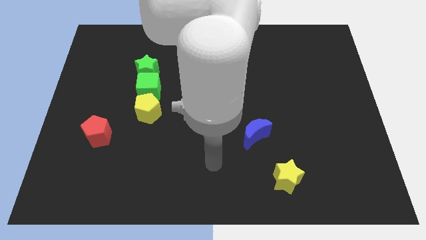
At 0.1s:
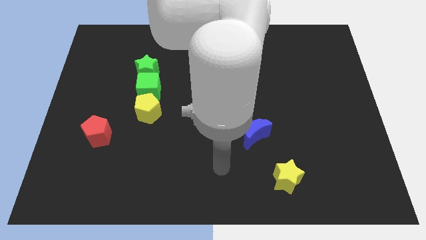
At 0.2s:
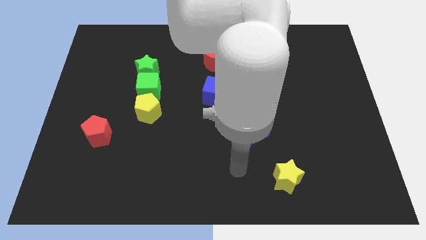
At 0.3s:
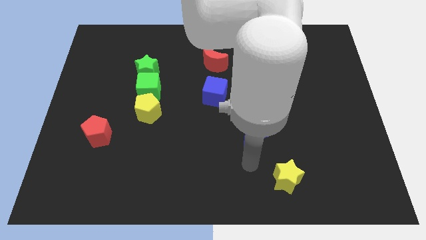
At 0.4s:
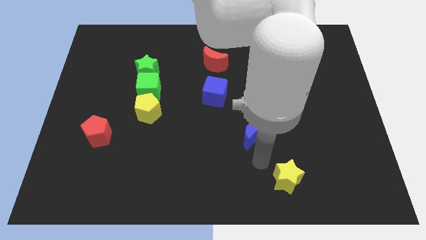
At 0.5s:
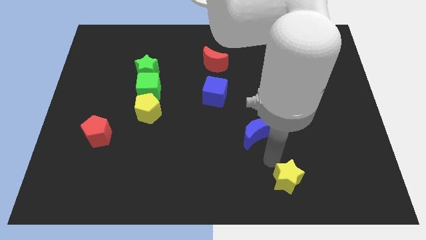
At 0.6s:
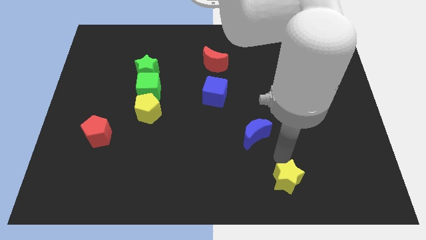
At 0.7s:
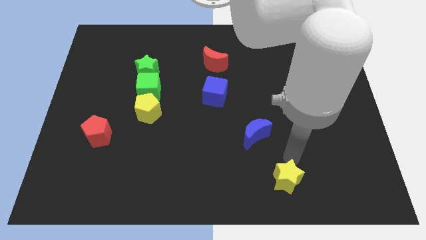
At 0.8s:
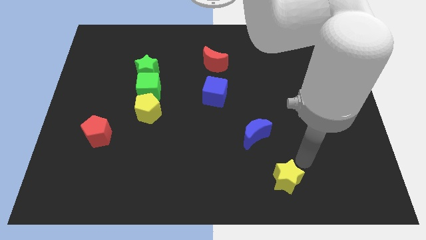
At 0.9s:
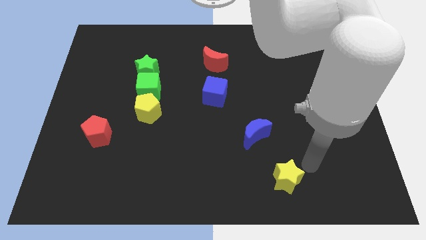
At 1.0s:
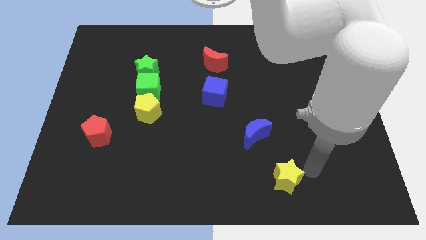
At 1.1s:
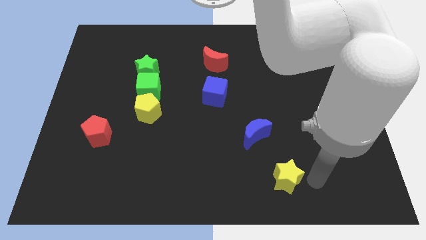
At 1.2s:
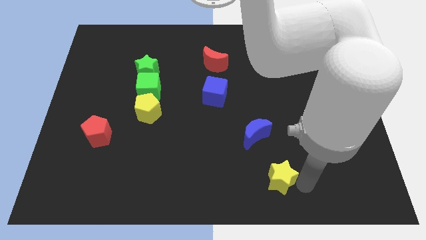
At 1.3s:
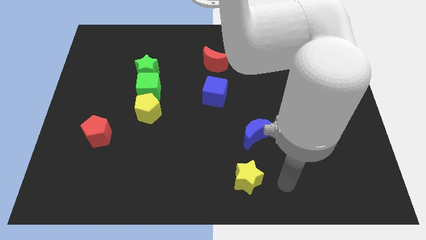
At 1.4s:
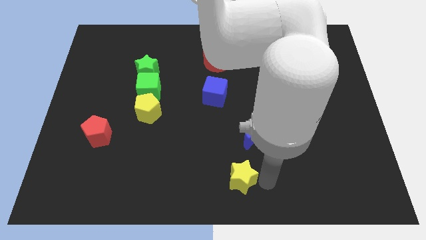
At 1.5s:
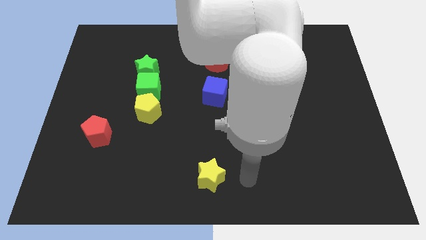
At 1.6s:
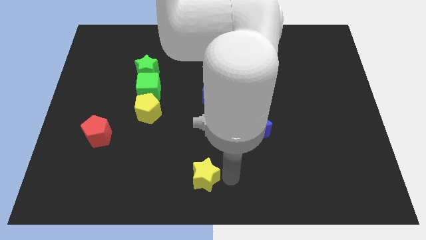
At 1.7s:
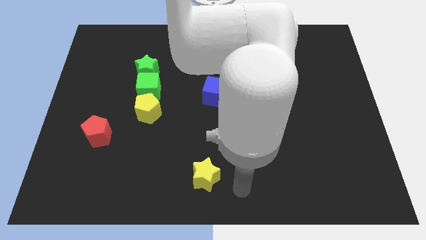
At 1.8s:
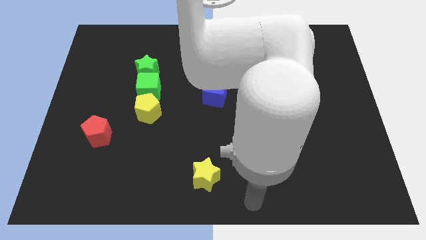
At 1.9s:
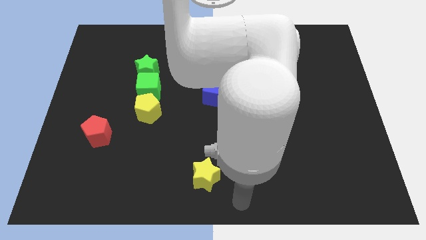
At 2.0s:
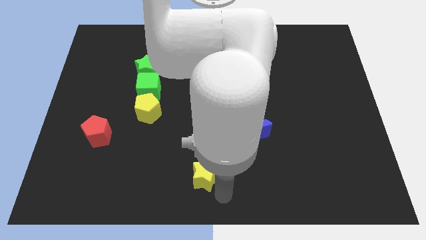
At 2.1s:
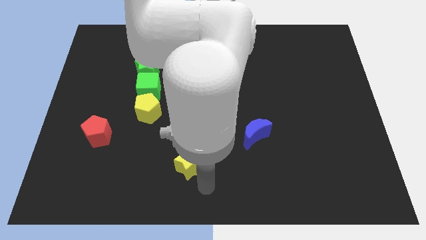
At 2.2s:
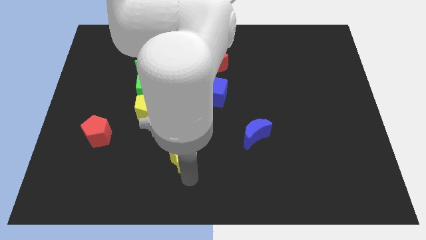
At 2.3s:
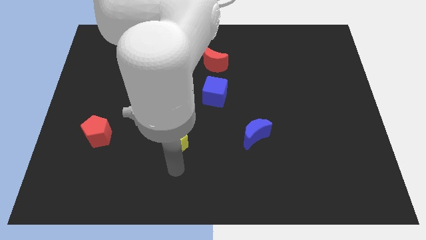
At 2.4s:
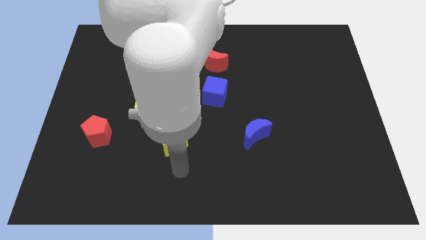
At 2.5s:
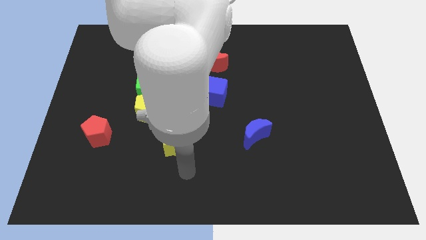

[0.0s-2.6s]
push the yellow star slightly to the left of the board

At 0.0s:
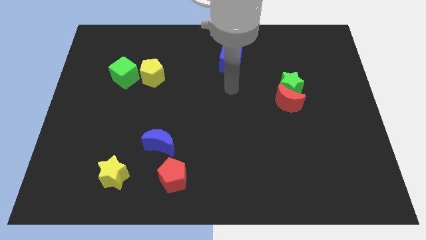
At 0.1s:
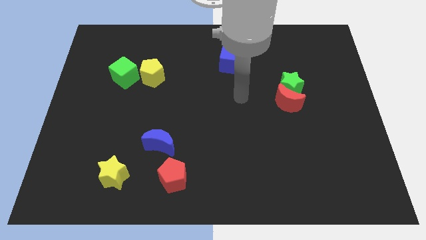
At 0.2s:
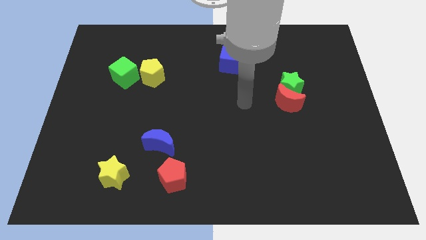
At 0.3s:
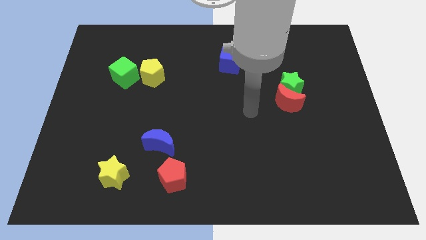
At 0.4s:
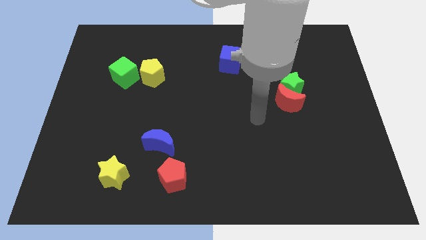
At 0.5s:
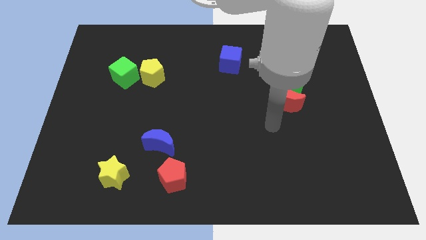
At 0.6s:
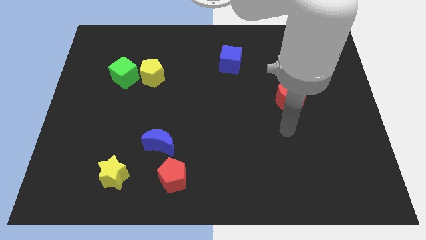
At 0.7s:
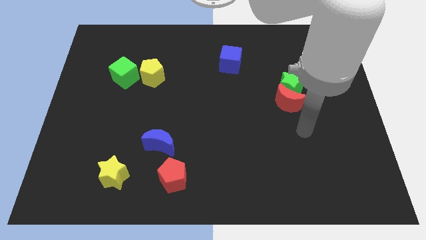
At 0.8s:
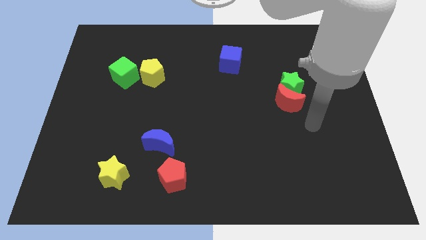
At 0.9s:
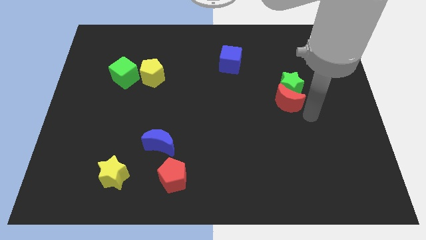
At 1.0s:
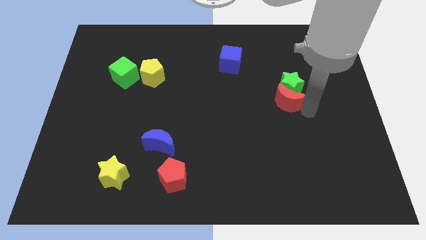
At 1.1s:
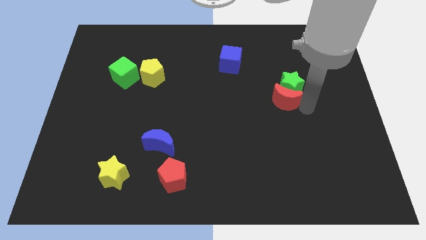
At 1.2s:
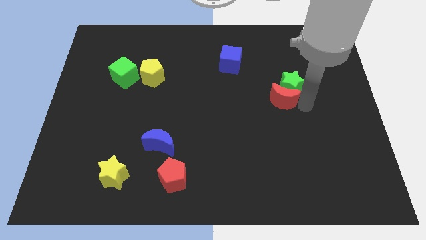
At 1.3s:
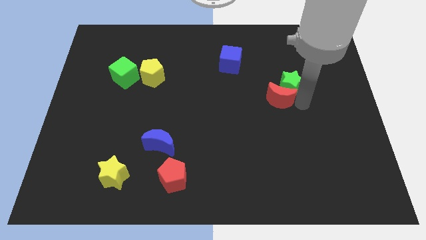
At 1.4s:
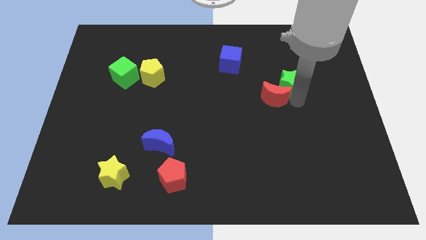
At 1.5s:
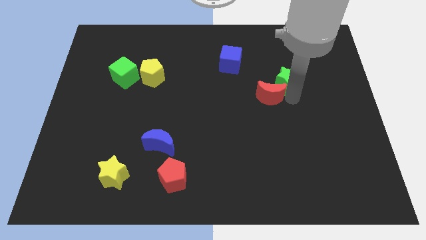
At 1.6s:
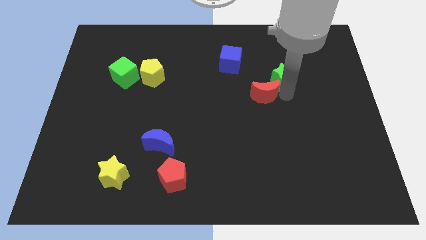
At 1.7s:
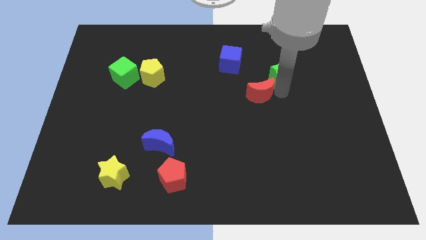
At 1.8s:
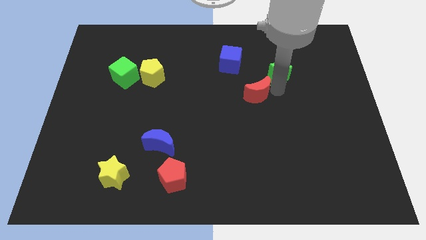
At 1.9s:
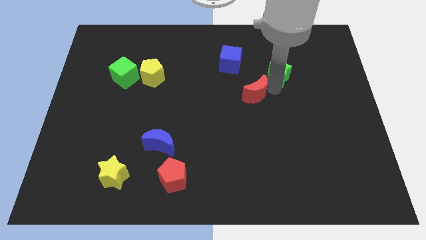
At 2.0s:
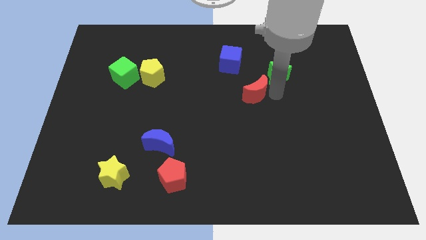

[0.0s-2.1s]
separate red moon from green star

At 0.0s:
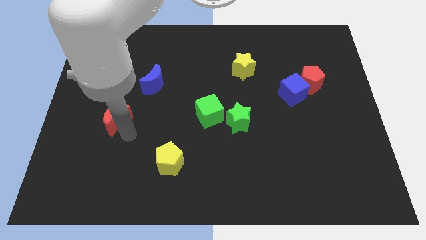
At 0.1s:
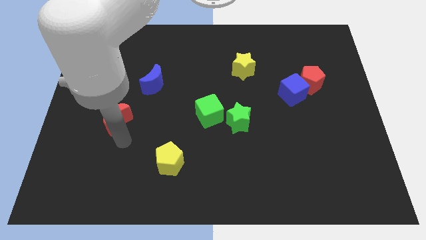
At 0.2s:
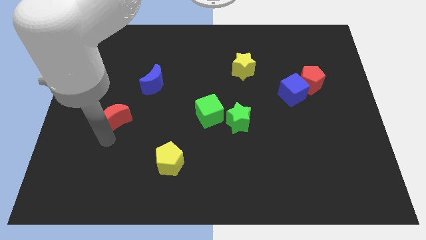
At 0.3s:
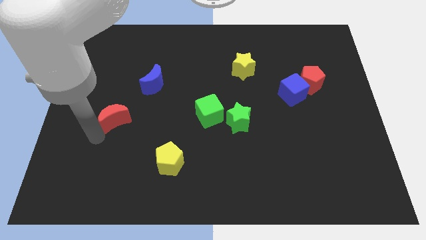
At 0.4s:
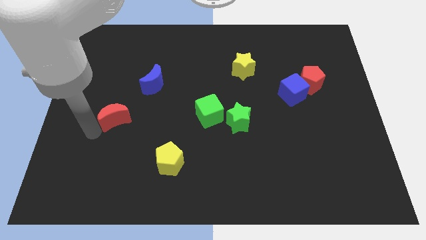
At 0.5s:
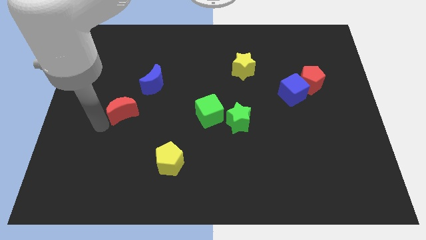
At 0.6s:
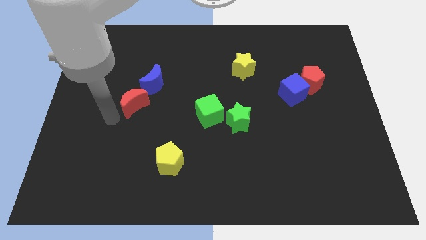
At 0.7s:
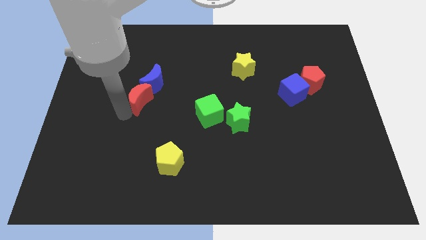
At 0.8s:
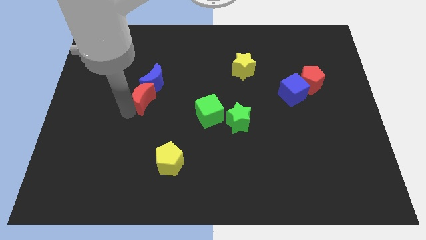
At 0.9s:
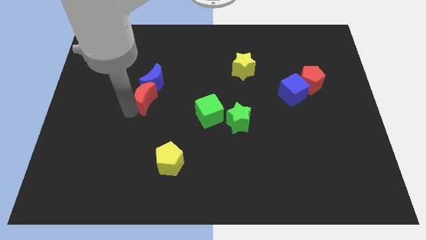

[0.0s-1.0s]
move red crescent into the blue crescent

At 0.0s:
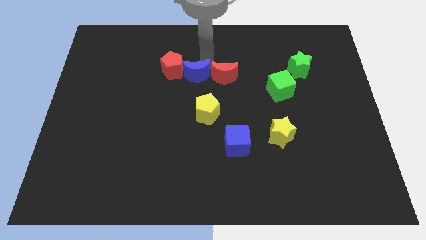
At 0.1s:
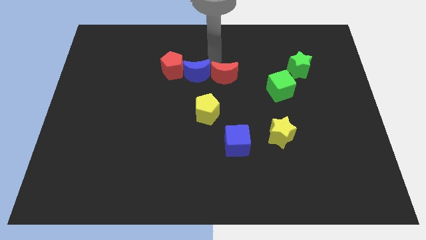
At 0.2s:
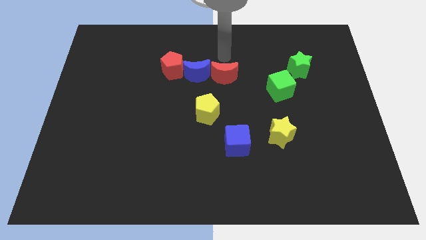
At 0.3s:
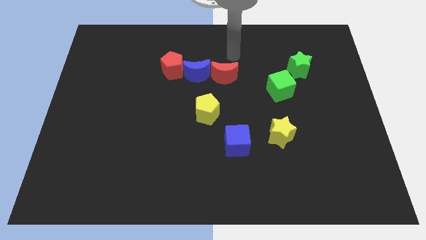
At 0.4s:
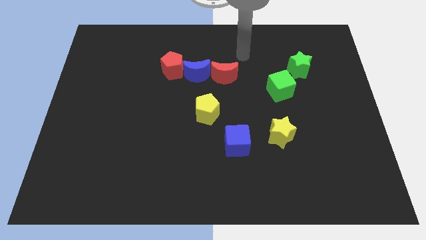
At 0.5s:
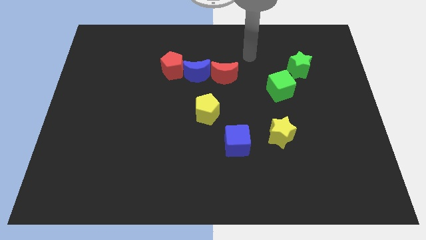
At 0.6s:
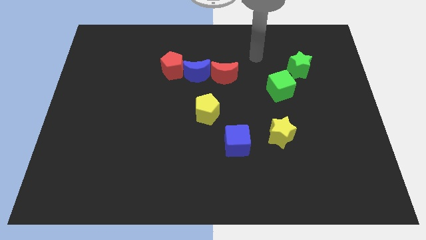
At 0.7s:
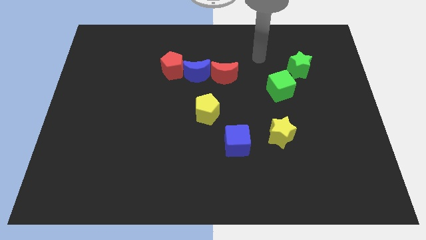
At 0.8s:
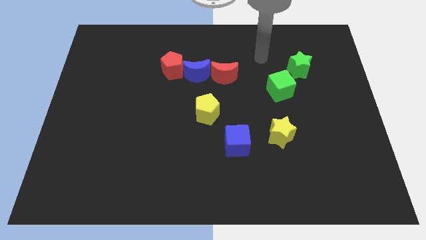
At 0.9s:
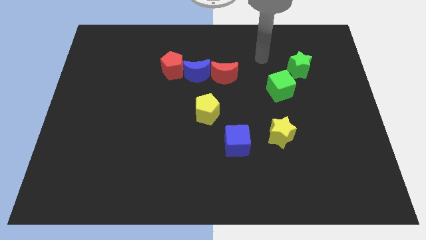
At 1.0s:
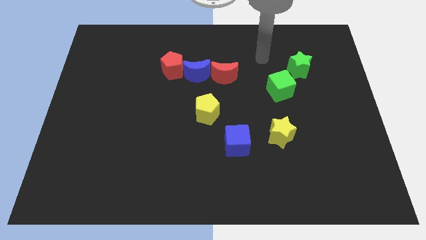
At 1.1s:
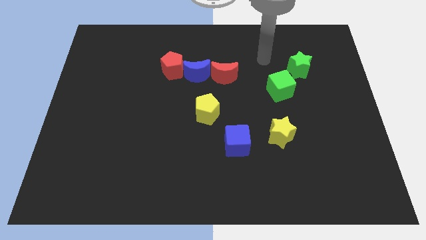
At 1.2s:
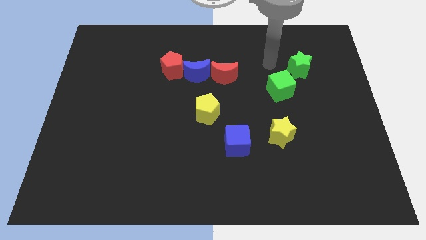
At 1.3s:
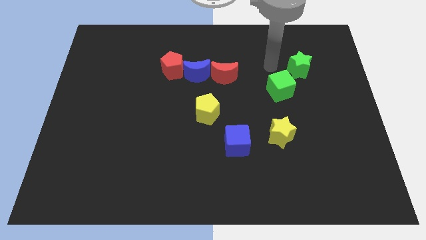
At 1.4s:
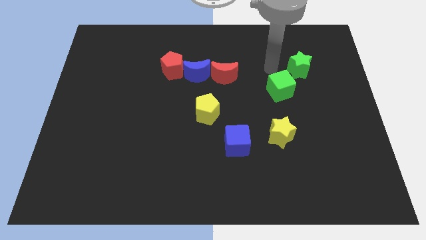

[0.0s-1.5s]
move your arm to the top of the green cube

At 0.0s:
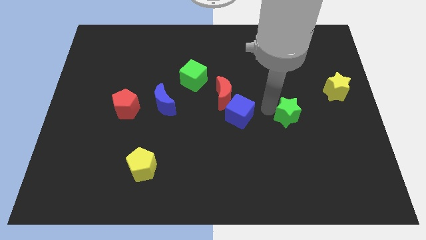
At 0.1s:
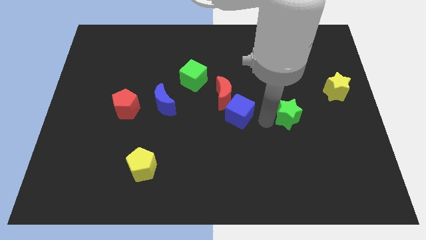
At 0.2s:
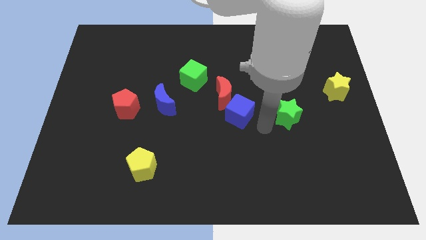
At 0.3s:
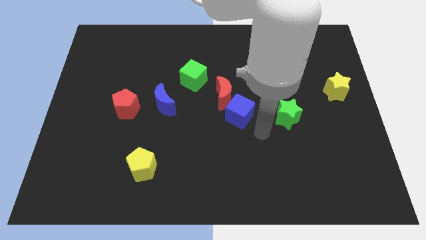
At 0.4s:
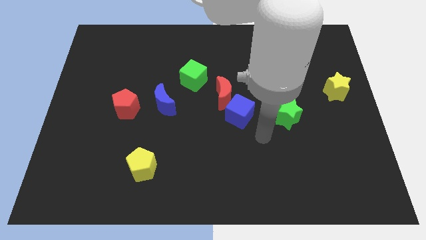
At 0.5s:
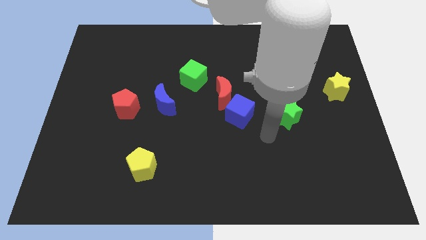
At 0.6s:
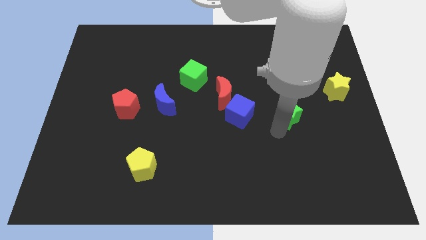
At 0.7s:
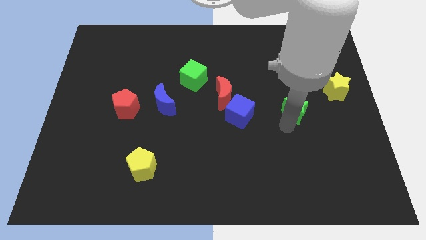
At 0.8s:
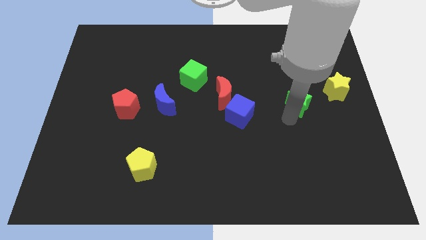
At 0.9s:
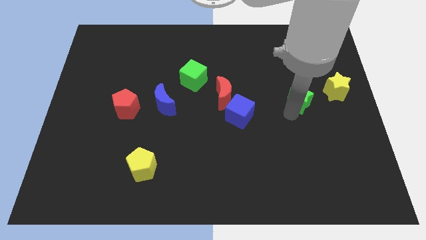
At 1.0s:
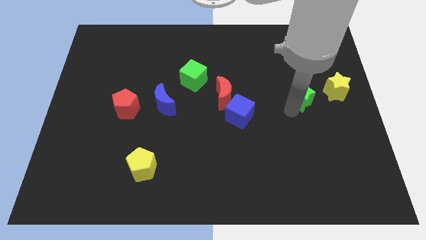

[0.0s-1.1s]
move green star to the yellow star

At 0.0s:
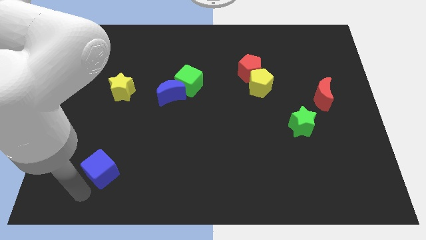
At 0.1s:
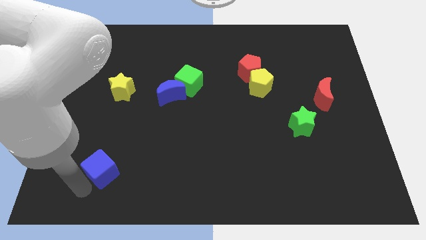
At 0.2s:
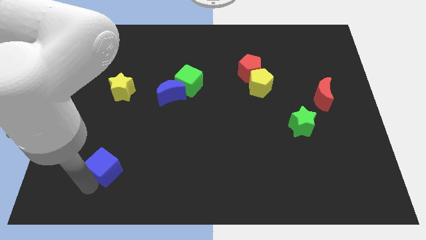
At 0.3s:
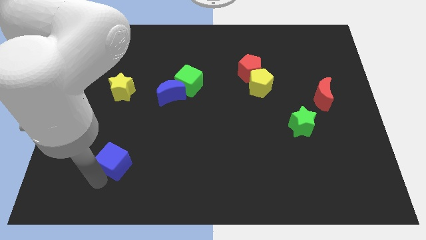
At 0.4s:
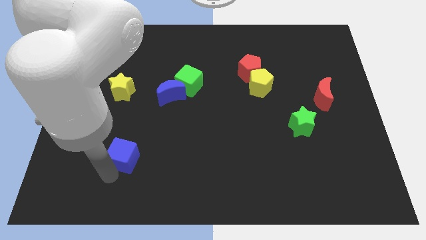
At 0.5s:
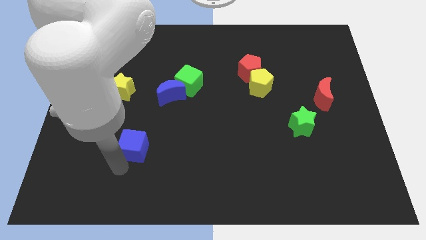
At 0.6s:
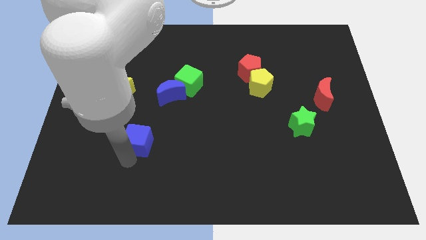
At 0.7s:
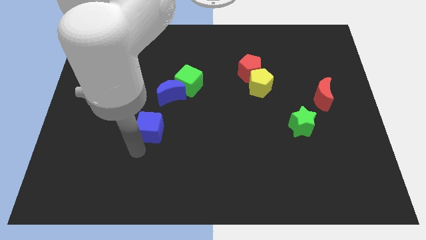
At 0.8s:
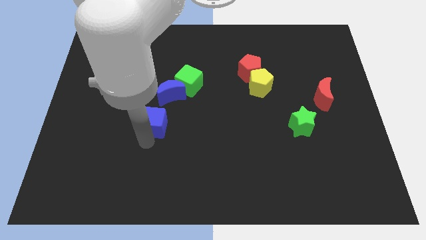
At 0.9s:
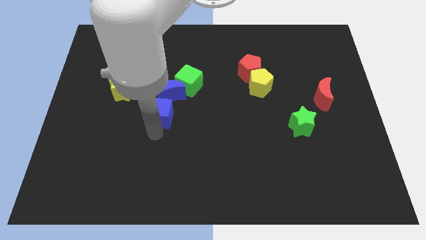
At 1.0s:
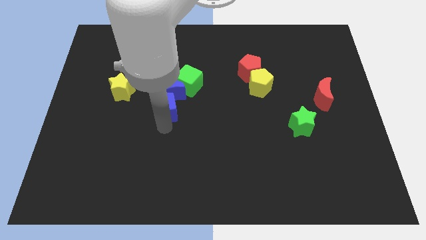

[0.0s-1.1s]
take the blue cube close to the blue crescent
